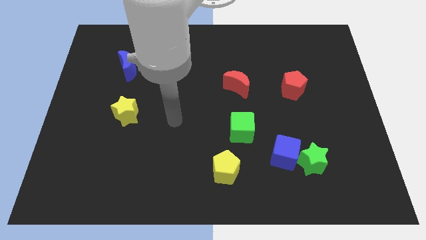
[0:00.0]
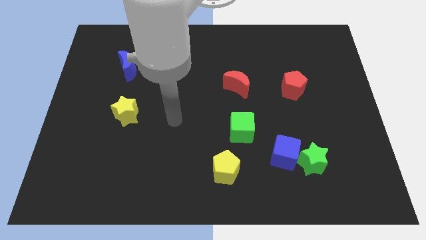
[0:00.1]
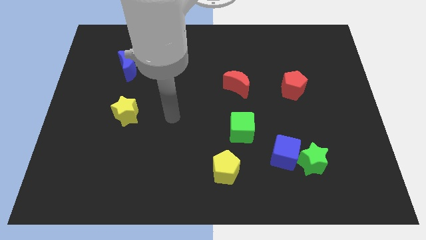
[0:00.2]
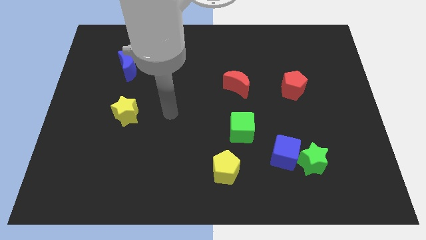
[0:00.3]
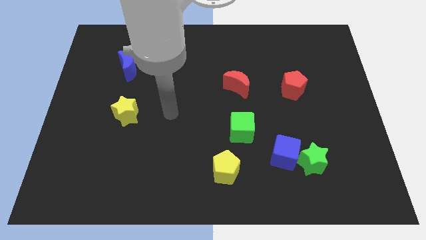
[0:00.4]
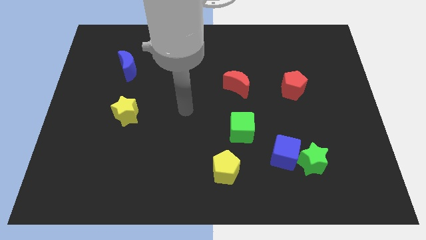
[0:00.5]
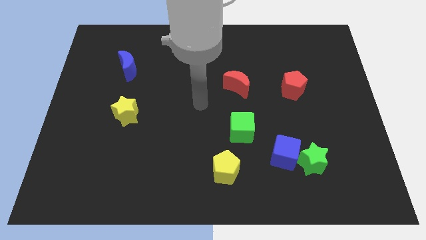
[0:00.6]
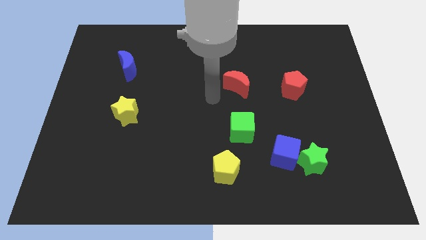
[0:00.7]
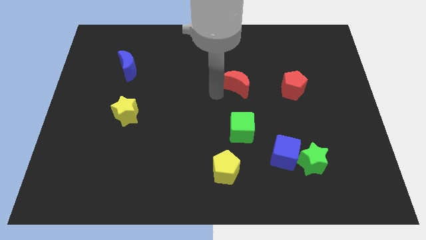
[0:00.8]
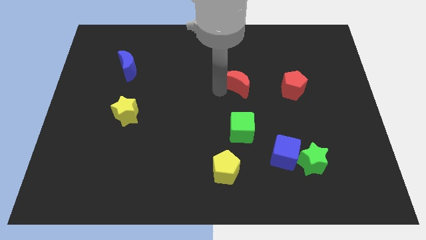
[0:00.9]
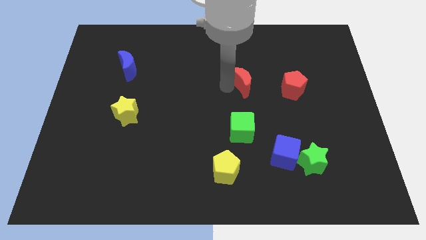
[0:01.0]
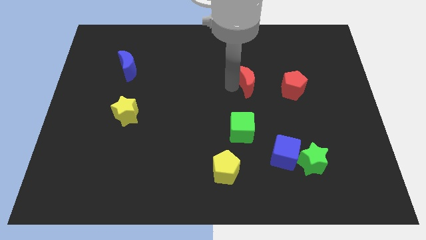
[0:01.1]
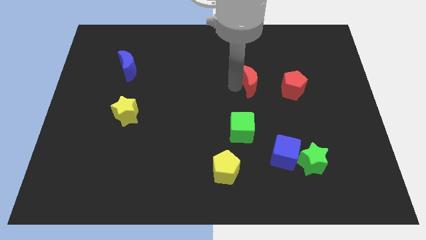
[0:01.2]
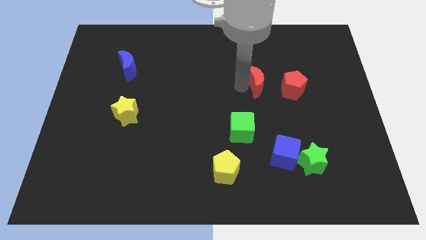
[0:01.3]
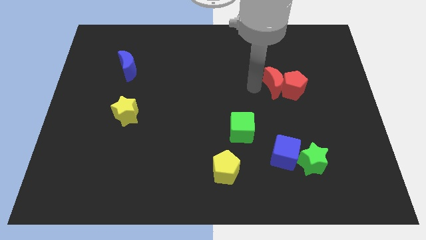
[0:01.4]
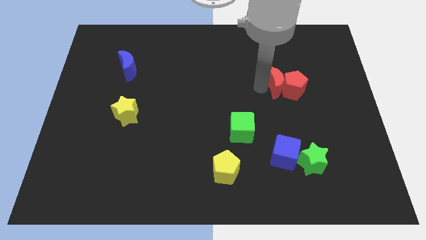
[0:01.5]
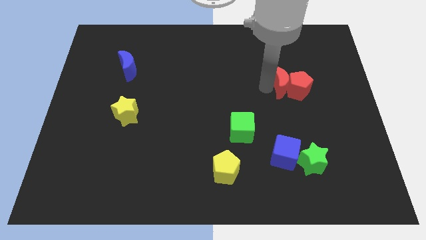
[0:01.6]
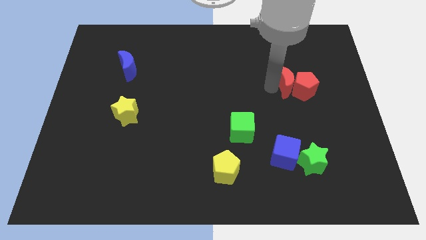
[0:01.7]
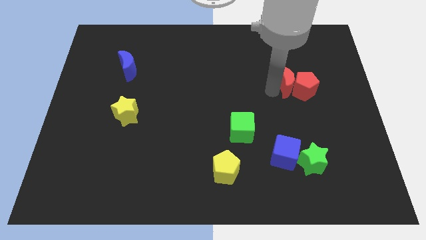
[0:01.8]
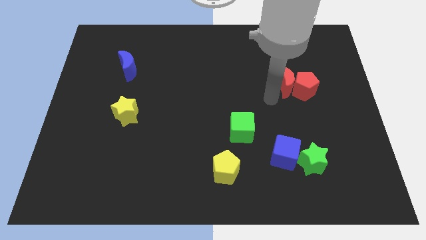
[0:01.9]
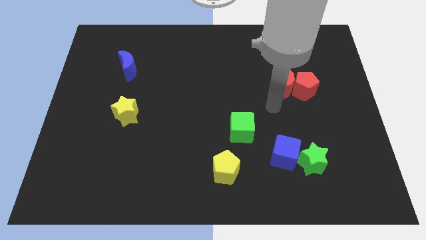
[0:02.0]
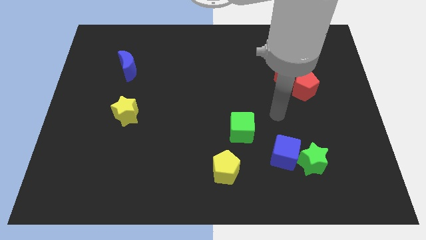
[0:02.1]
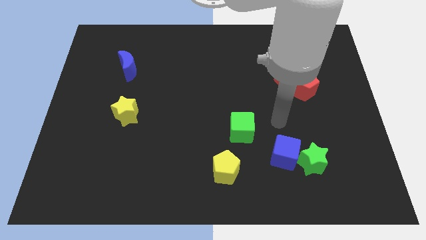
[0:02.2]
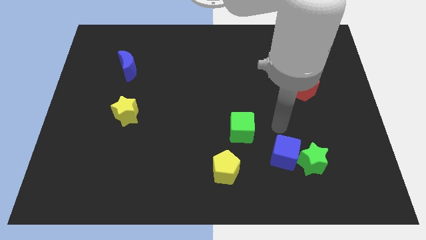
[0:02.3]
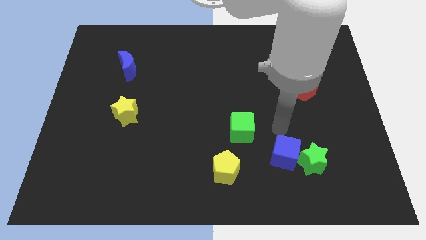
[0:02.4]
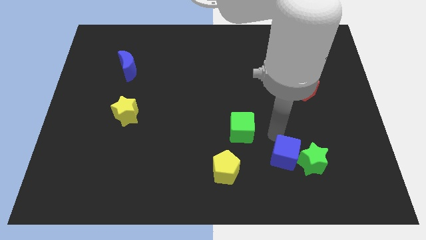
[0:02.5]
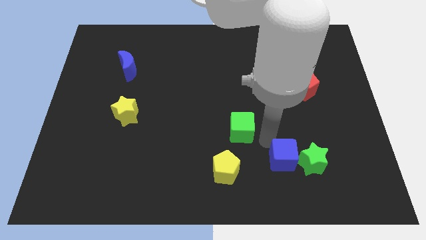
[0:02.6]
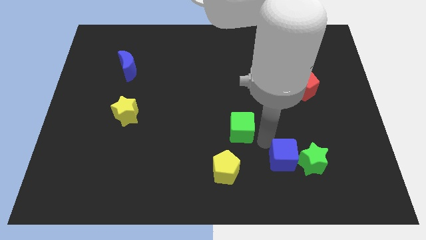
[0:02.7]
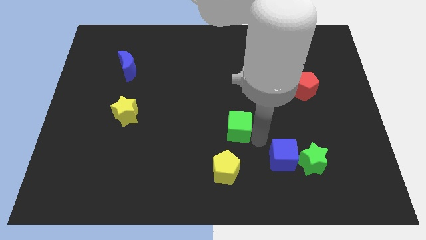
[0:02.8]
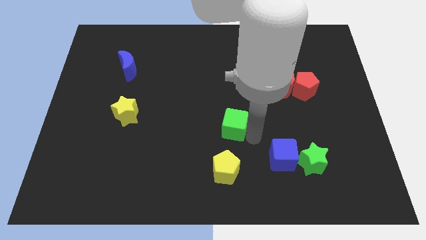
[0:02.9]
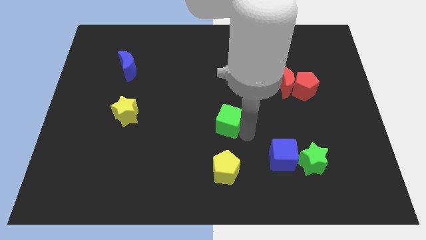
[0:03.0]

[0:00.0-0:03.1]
slide the red moon into the red pentagon

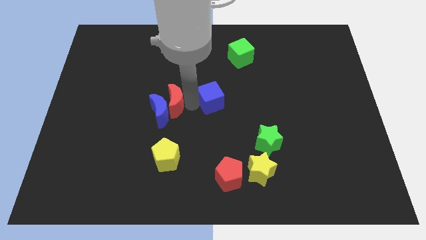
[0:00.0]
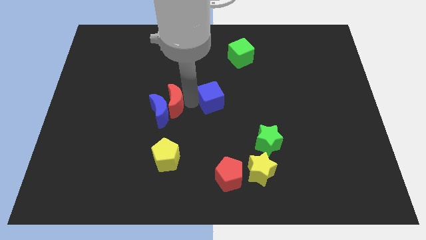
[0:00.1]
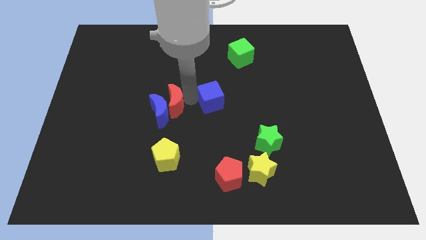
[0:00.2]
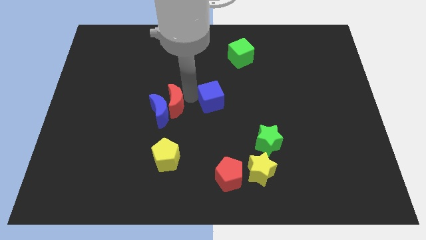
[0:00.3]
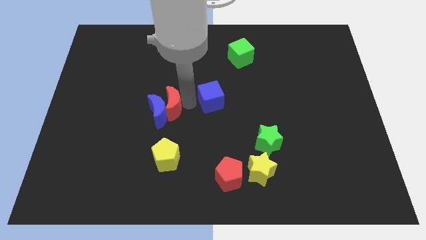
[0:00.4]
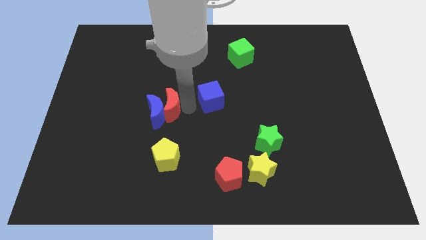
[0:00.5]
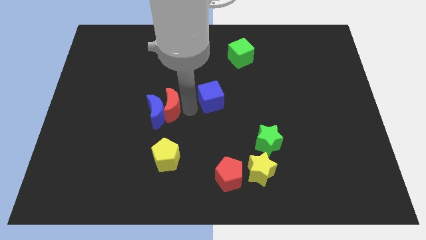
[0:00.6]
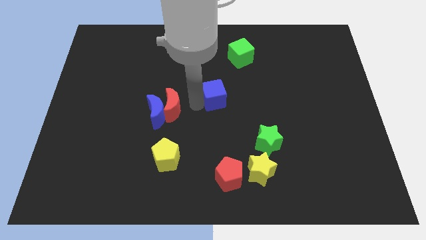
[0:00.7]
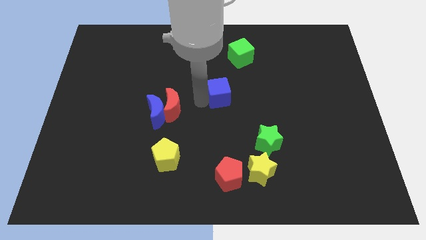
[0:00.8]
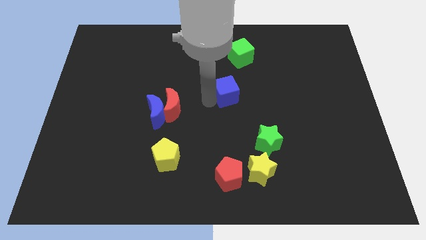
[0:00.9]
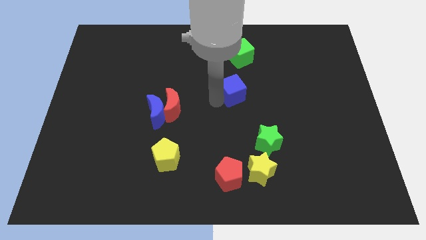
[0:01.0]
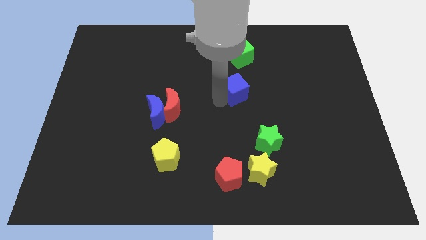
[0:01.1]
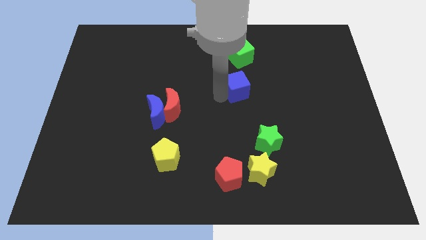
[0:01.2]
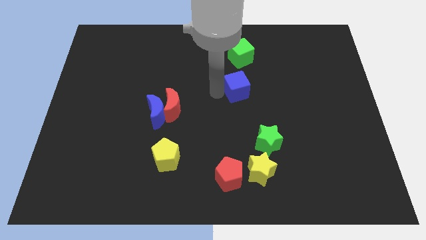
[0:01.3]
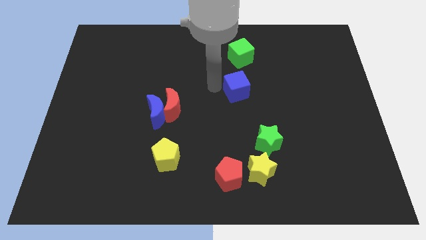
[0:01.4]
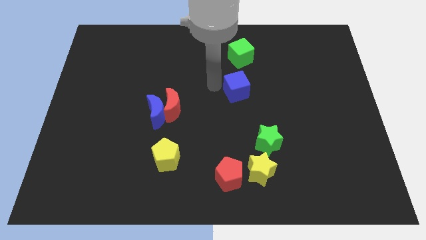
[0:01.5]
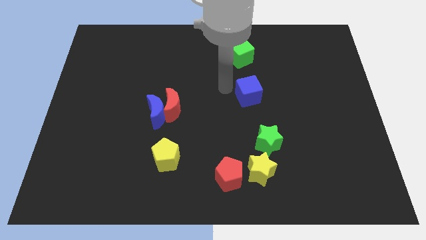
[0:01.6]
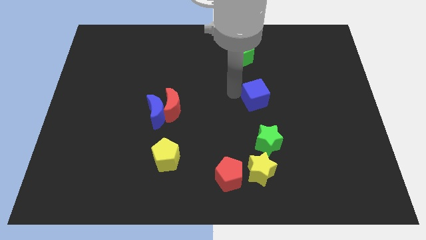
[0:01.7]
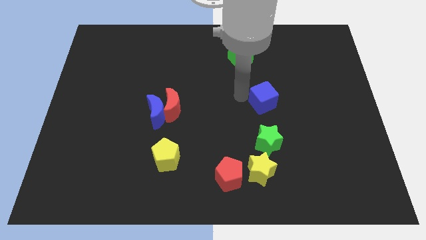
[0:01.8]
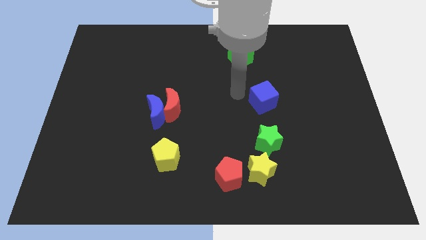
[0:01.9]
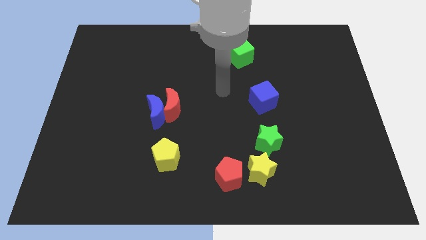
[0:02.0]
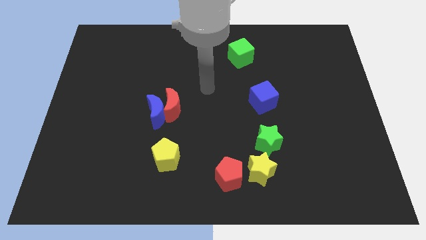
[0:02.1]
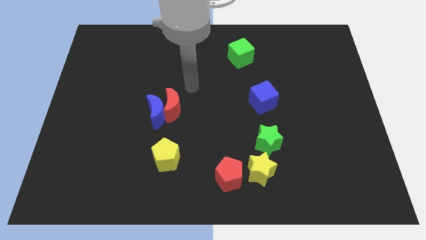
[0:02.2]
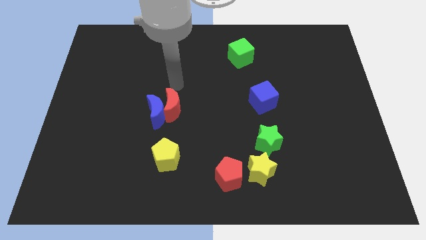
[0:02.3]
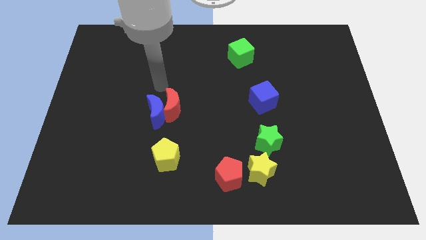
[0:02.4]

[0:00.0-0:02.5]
put the blue cube above the green star

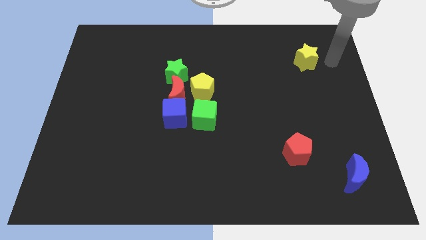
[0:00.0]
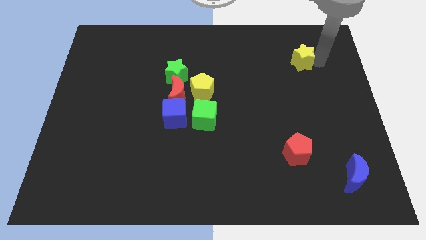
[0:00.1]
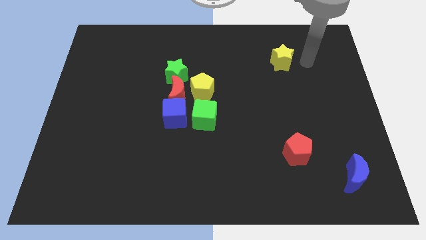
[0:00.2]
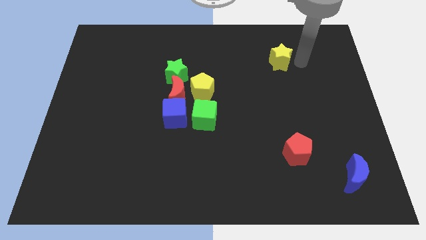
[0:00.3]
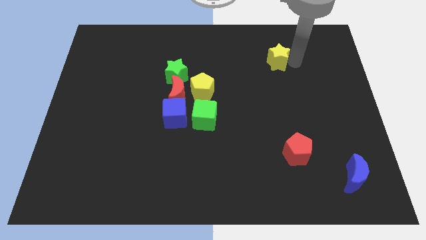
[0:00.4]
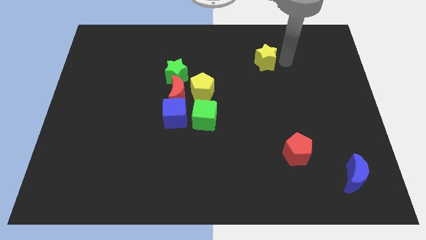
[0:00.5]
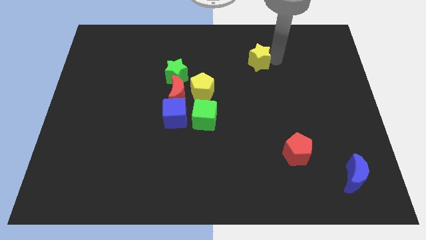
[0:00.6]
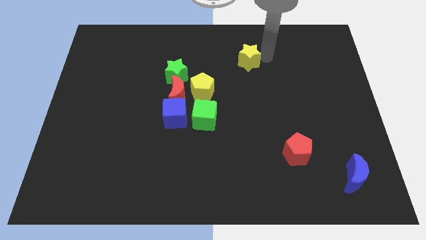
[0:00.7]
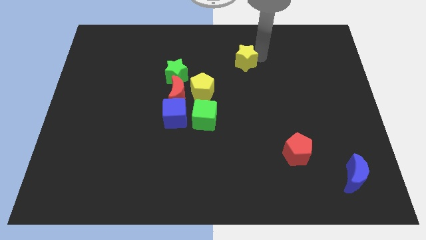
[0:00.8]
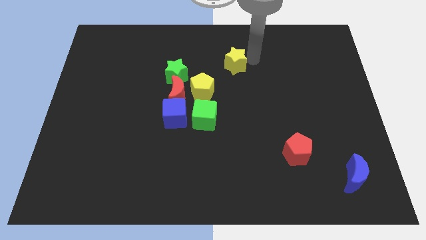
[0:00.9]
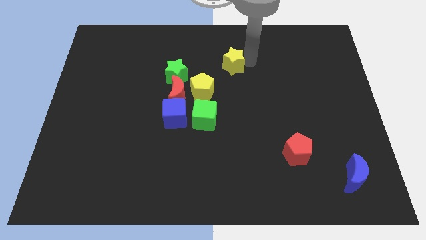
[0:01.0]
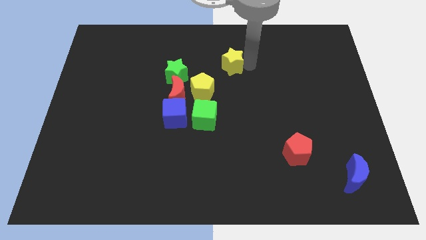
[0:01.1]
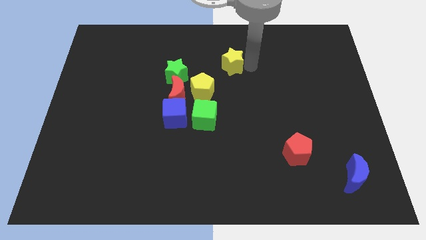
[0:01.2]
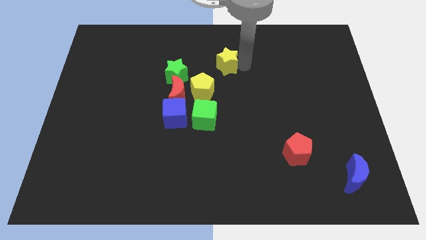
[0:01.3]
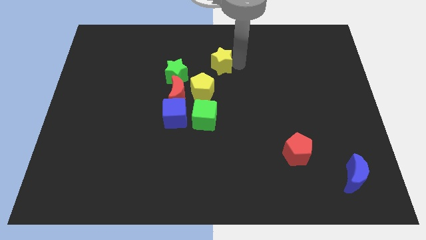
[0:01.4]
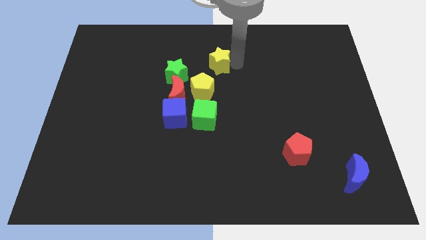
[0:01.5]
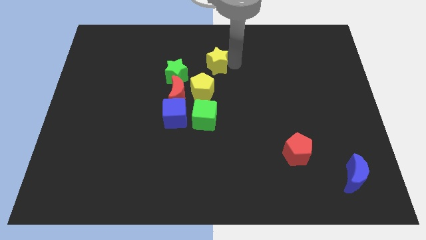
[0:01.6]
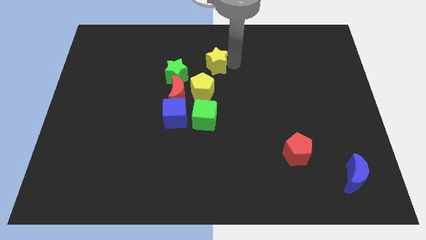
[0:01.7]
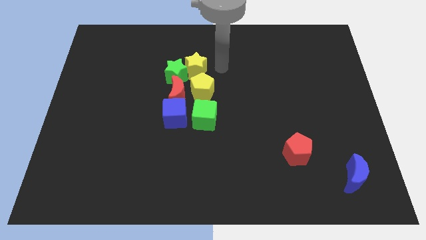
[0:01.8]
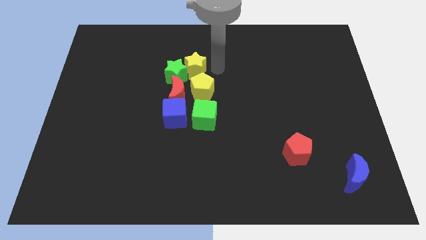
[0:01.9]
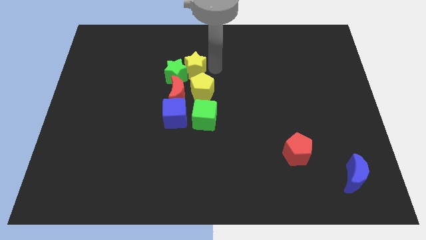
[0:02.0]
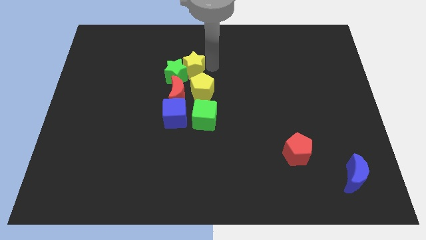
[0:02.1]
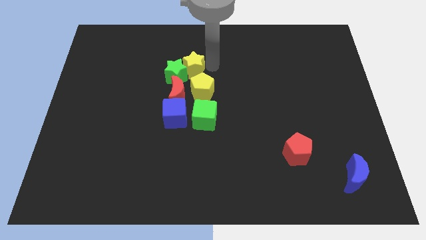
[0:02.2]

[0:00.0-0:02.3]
move the yellow star into the green star

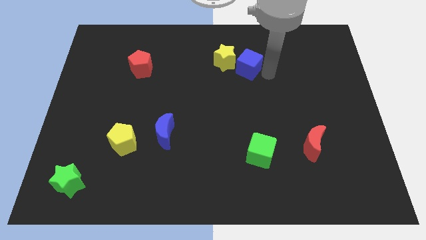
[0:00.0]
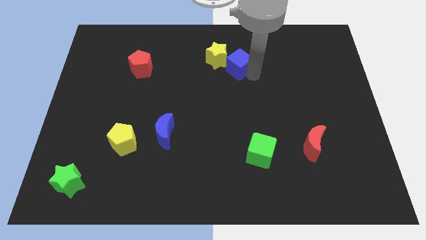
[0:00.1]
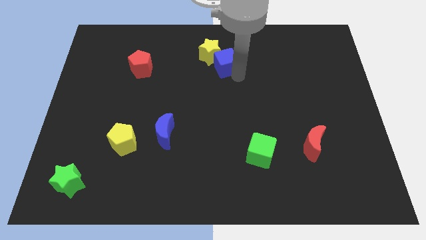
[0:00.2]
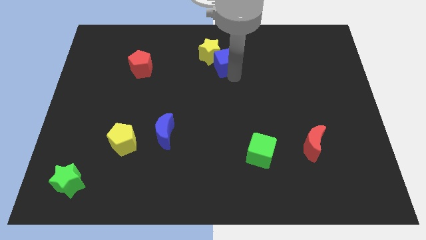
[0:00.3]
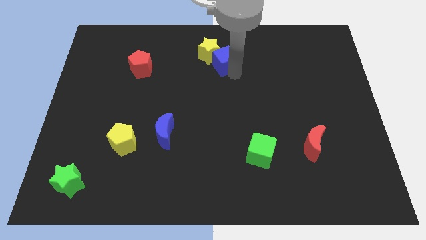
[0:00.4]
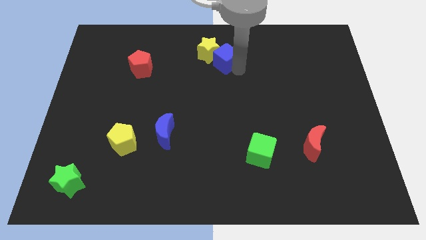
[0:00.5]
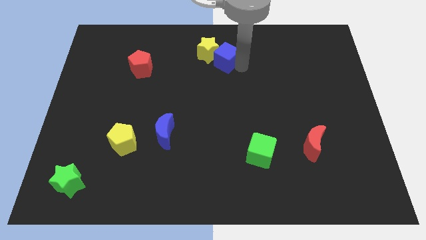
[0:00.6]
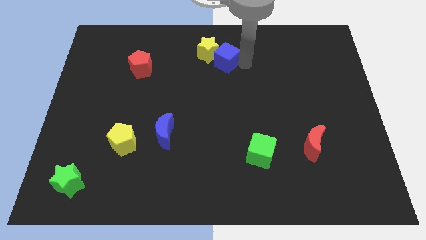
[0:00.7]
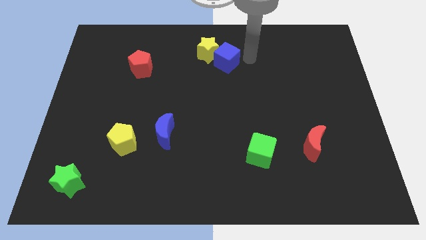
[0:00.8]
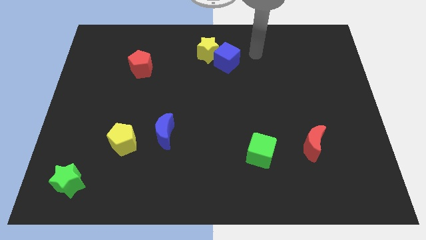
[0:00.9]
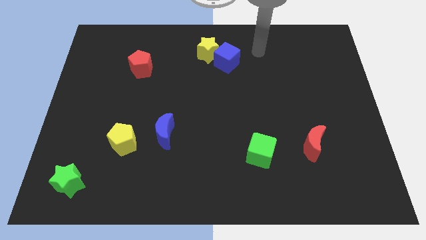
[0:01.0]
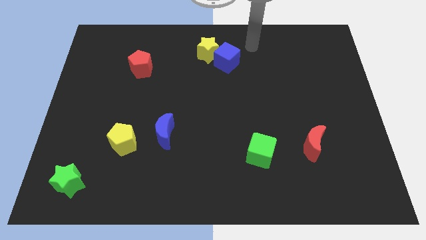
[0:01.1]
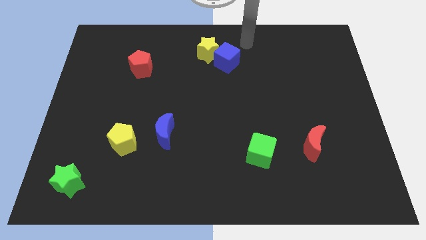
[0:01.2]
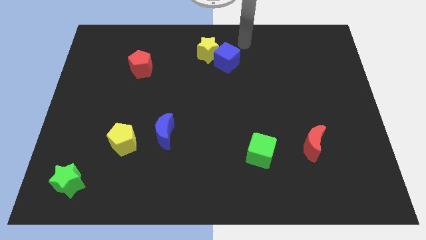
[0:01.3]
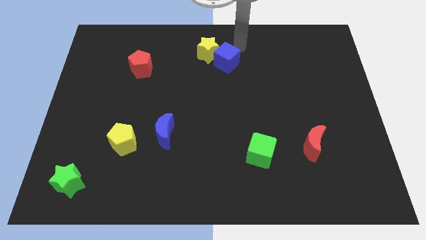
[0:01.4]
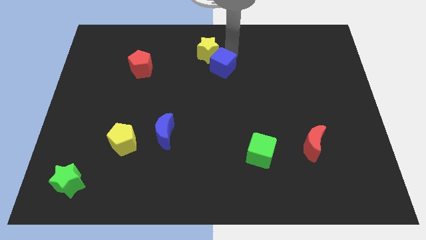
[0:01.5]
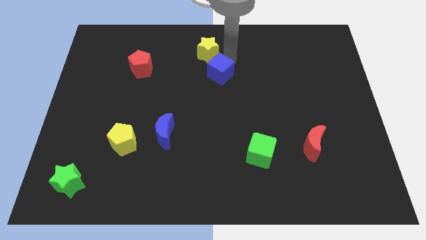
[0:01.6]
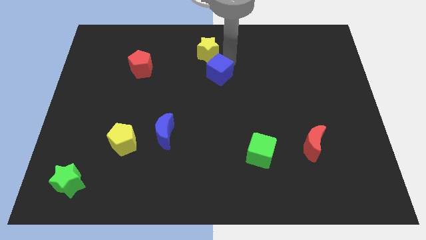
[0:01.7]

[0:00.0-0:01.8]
push the blue cube into the yellow star
